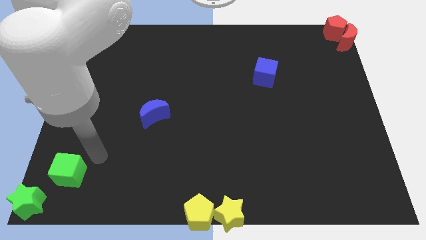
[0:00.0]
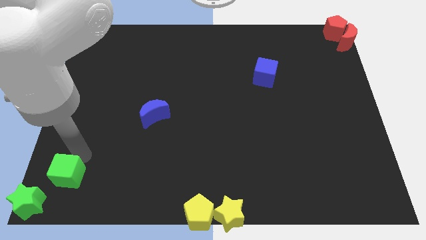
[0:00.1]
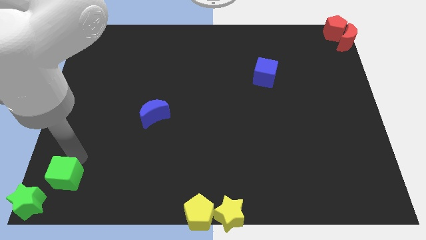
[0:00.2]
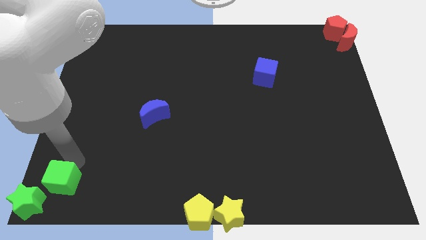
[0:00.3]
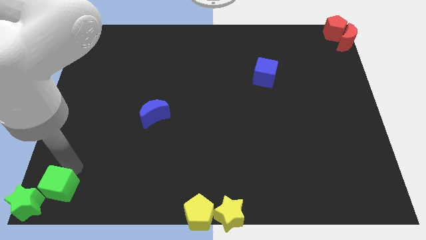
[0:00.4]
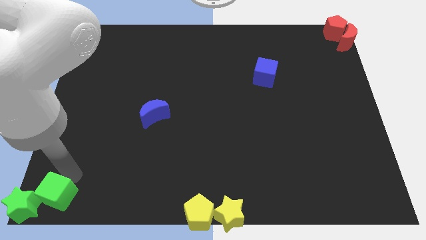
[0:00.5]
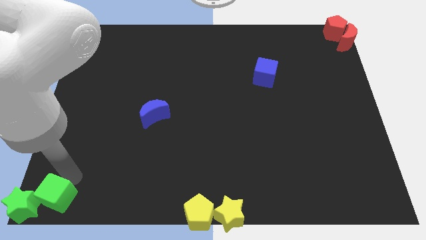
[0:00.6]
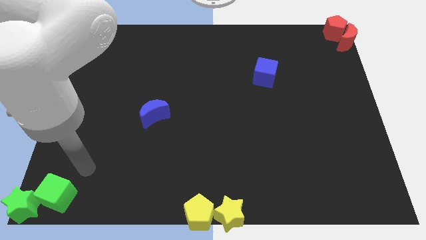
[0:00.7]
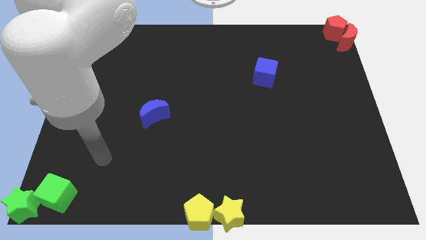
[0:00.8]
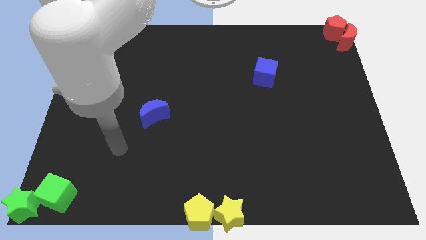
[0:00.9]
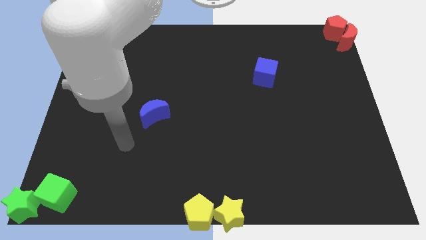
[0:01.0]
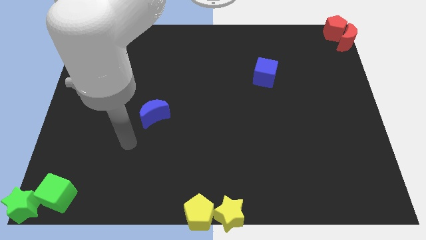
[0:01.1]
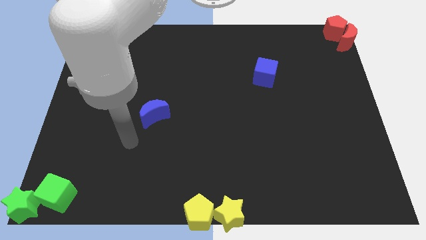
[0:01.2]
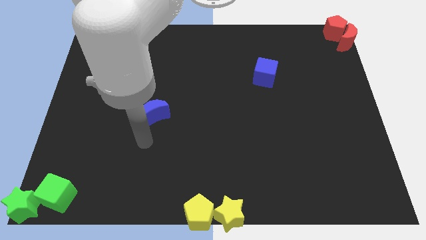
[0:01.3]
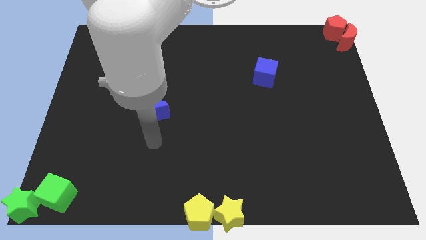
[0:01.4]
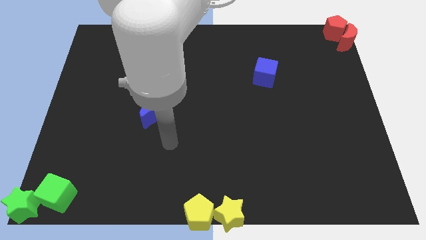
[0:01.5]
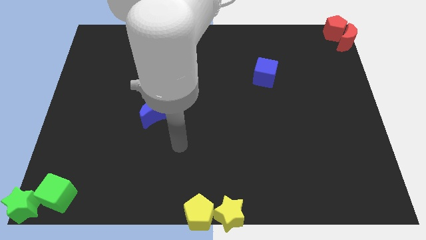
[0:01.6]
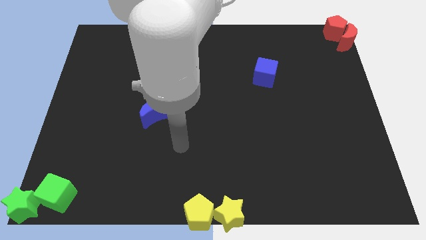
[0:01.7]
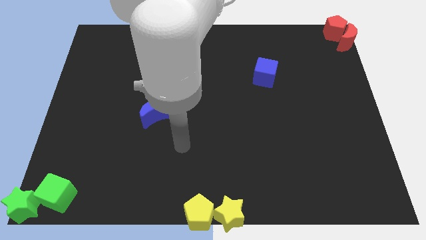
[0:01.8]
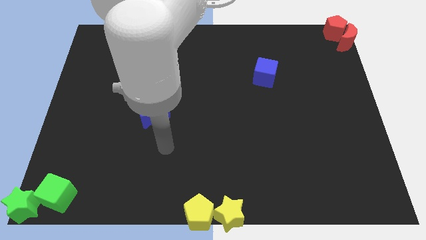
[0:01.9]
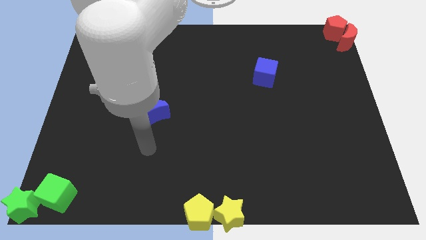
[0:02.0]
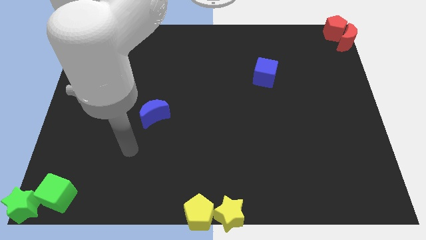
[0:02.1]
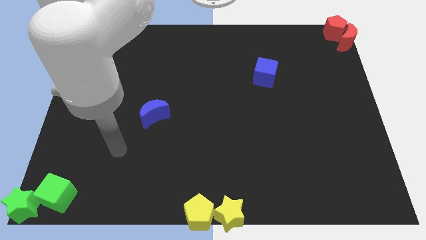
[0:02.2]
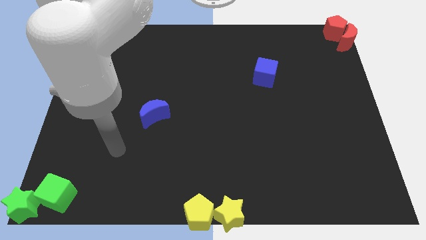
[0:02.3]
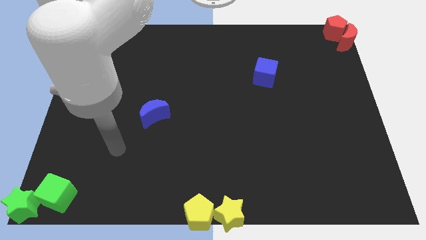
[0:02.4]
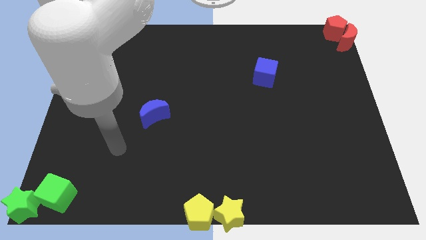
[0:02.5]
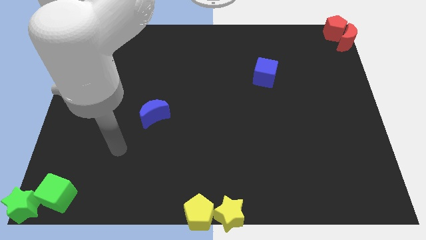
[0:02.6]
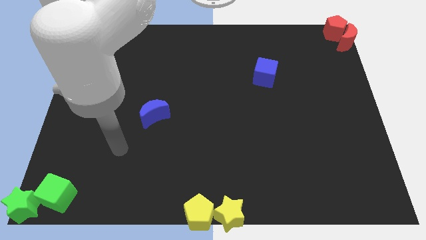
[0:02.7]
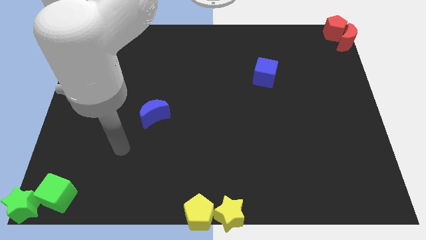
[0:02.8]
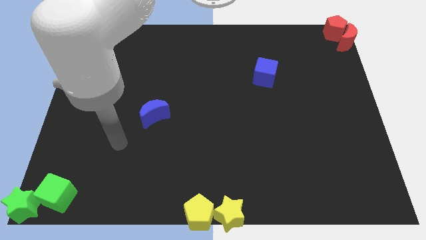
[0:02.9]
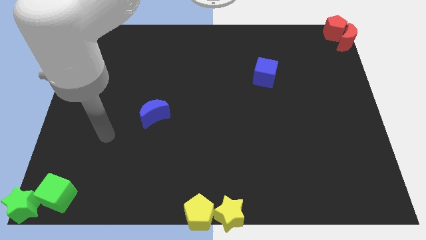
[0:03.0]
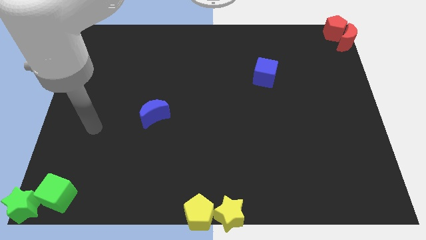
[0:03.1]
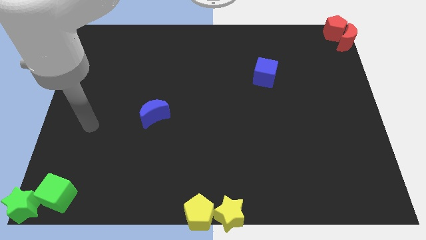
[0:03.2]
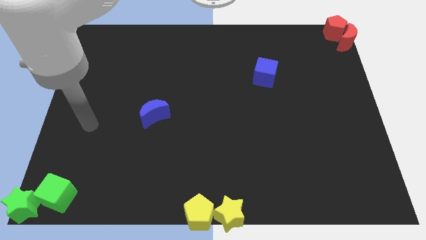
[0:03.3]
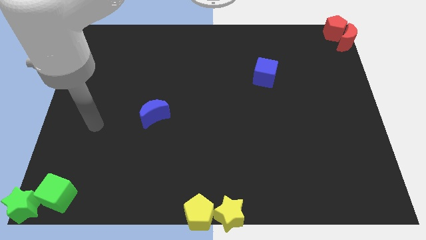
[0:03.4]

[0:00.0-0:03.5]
place the green cube at the bottom left corner

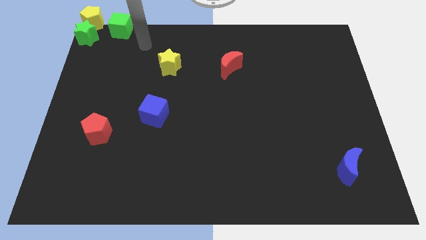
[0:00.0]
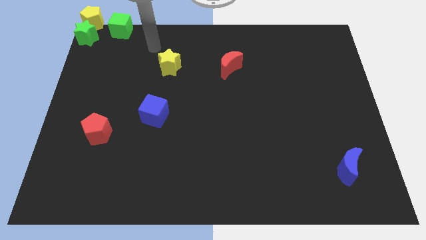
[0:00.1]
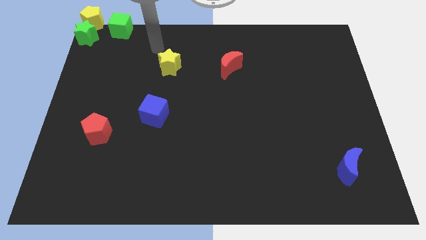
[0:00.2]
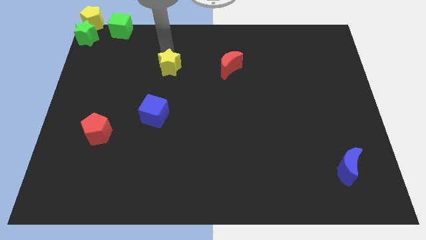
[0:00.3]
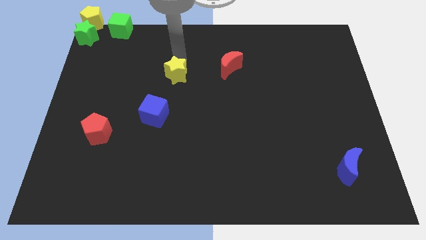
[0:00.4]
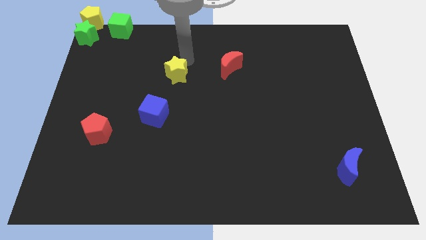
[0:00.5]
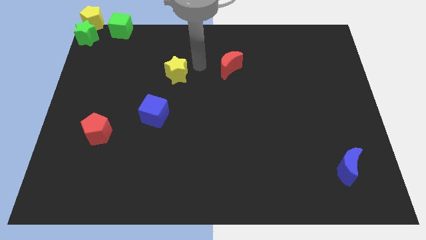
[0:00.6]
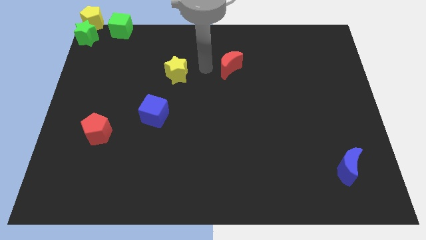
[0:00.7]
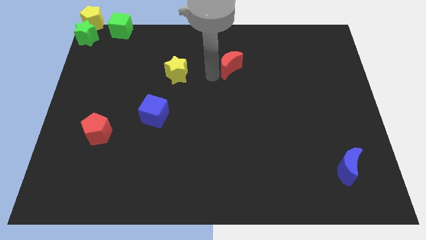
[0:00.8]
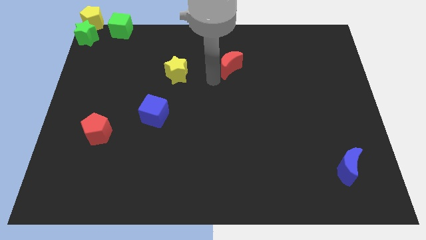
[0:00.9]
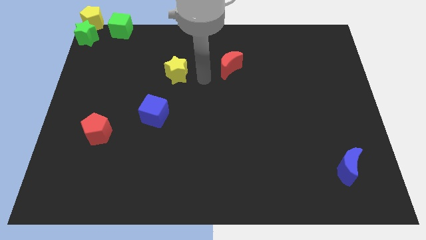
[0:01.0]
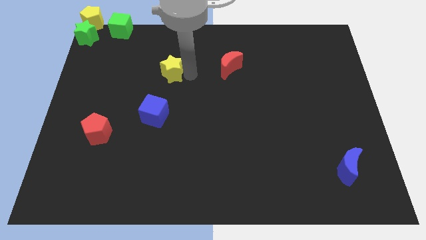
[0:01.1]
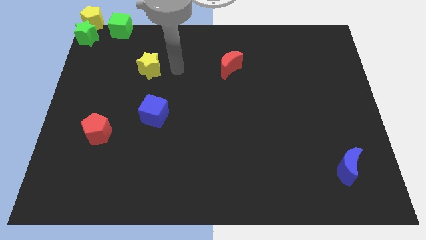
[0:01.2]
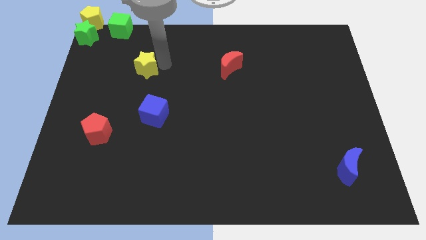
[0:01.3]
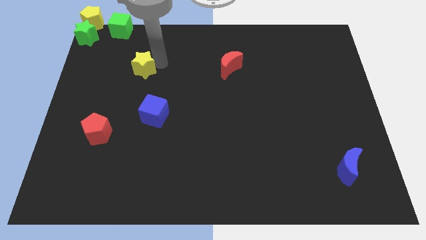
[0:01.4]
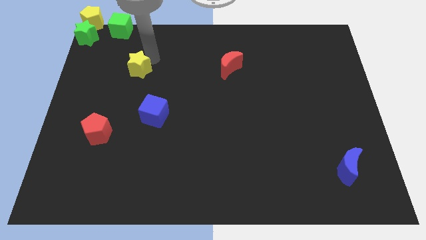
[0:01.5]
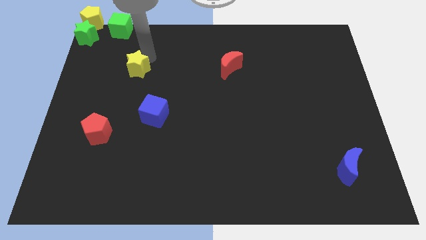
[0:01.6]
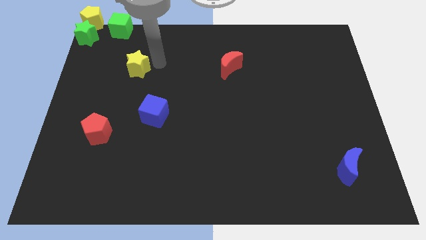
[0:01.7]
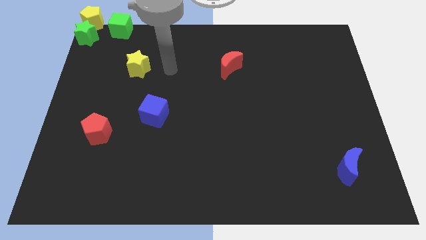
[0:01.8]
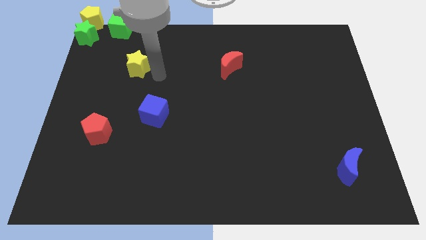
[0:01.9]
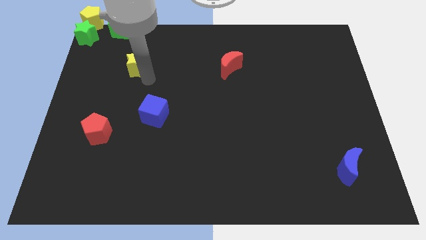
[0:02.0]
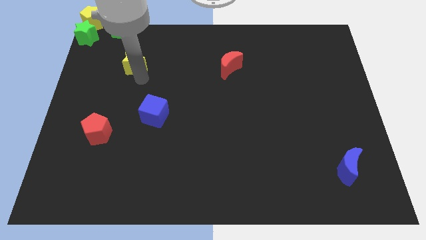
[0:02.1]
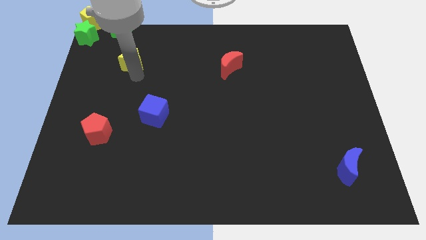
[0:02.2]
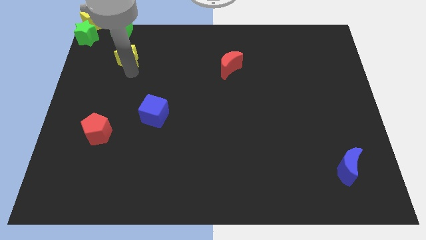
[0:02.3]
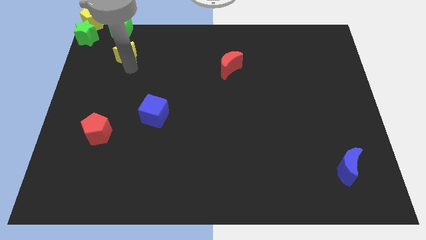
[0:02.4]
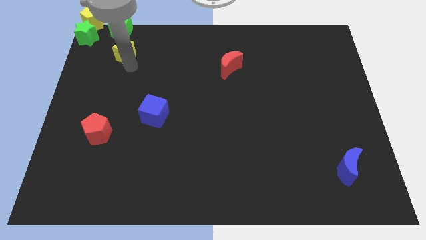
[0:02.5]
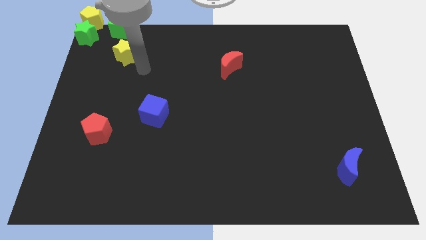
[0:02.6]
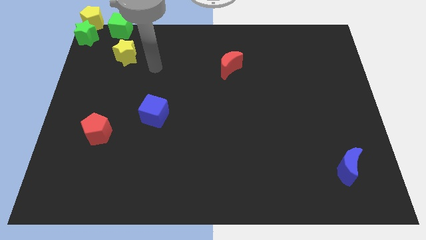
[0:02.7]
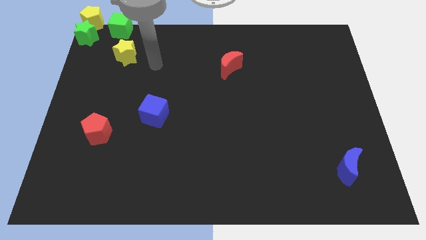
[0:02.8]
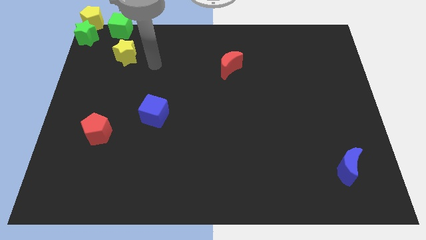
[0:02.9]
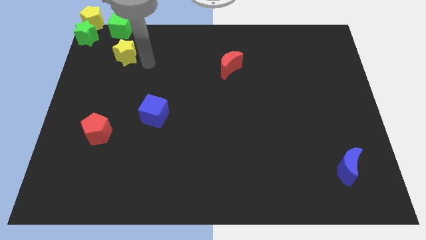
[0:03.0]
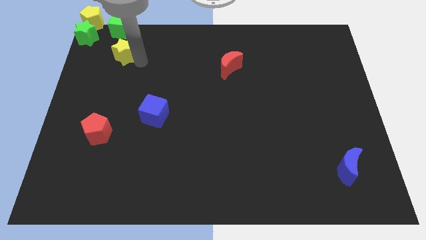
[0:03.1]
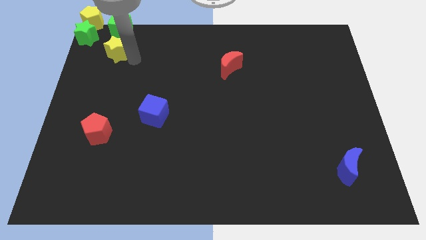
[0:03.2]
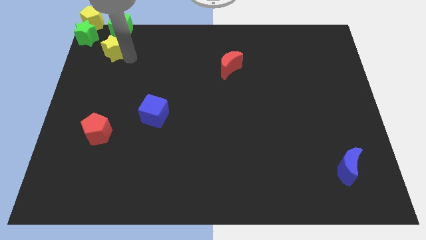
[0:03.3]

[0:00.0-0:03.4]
move the yellow star to the bottom of the green cube

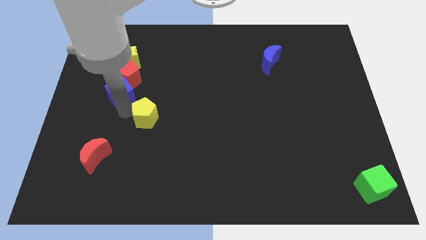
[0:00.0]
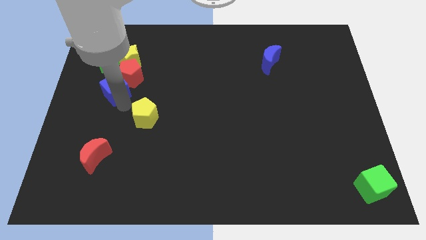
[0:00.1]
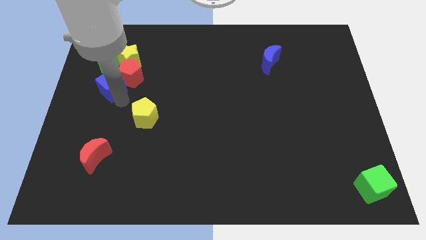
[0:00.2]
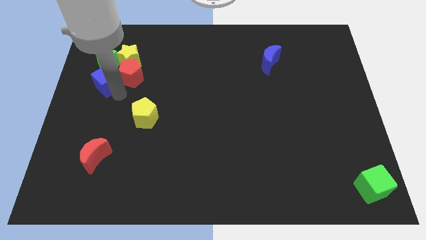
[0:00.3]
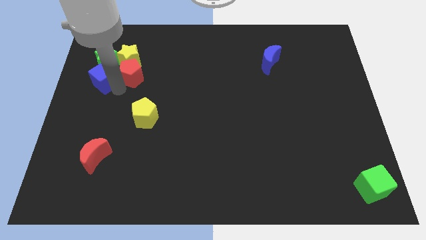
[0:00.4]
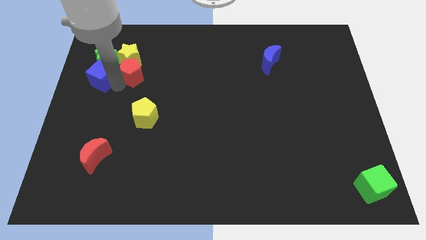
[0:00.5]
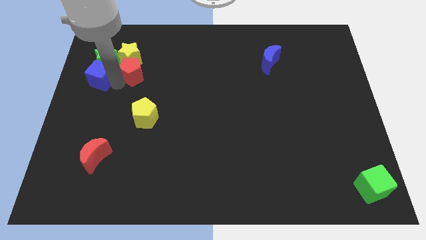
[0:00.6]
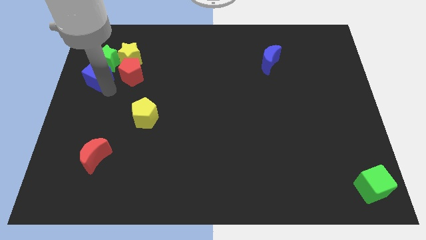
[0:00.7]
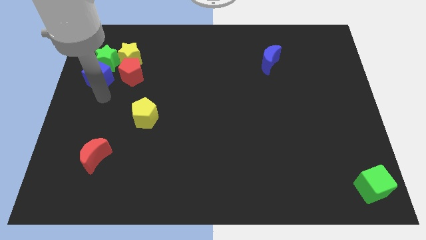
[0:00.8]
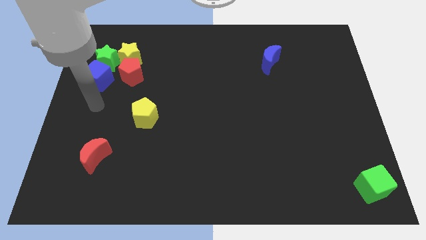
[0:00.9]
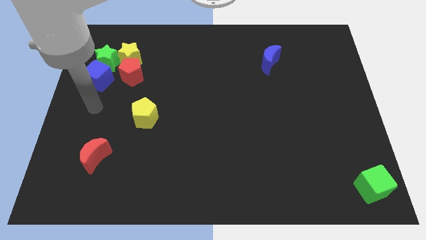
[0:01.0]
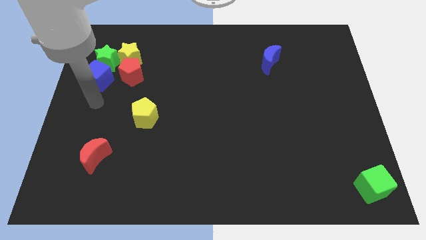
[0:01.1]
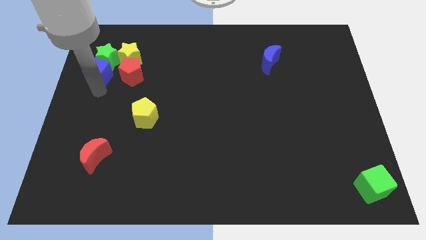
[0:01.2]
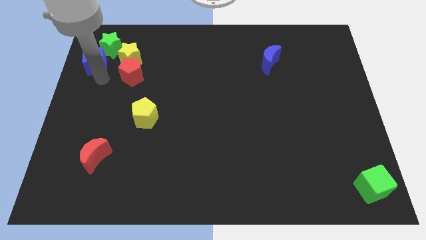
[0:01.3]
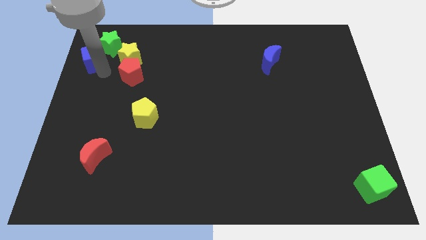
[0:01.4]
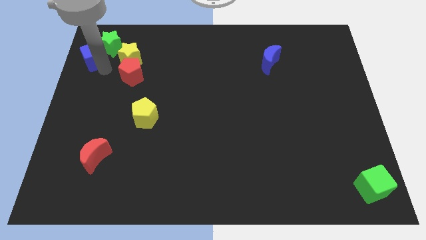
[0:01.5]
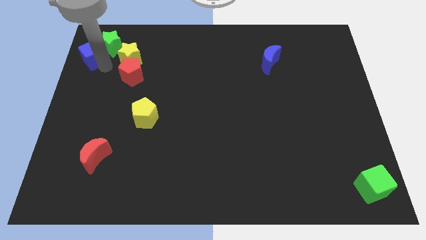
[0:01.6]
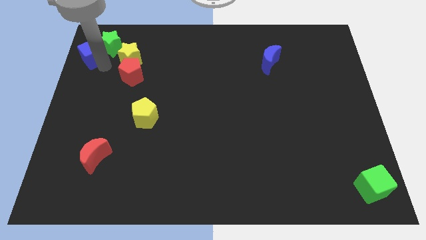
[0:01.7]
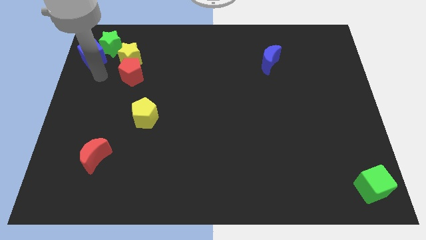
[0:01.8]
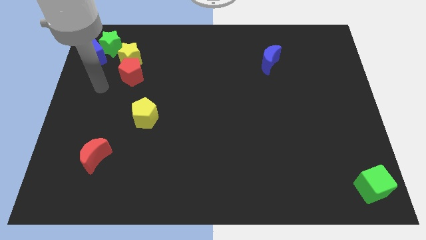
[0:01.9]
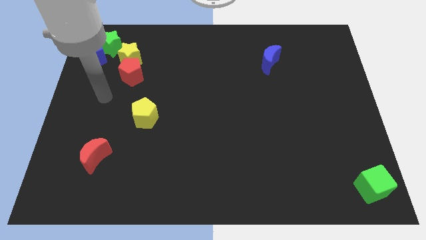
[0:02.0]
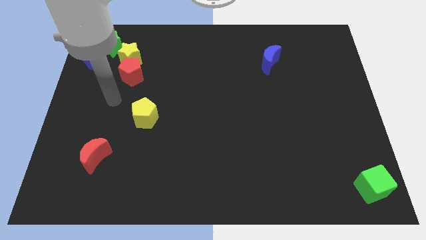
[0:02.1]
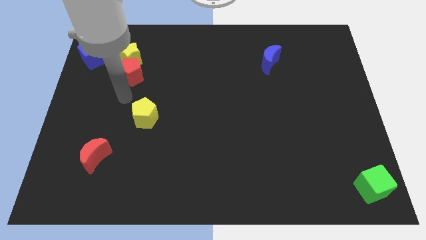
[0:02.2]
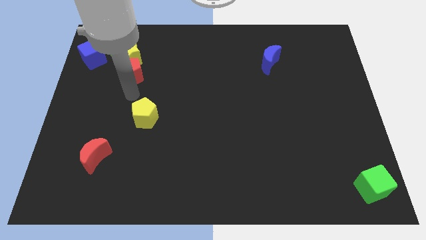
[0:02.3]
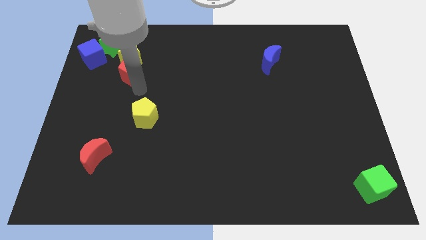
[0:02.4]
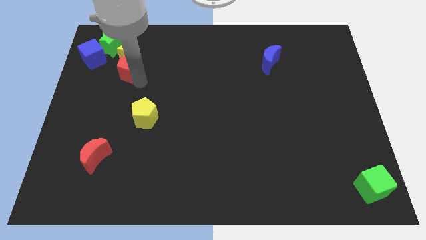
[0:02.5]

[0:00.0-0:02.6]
move the blue cube and the green star towards the top
